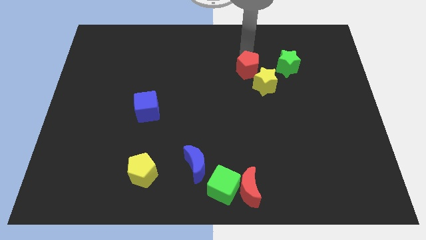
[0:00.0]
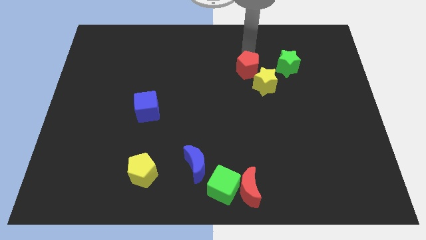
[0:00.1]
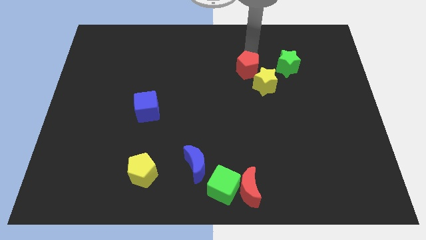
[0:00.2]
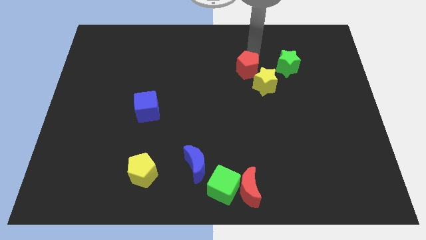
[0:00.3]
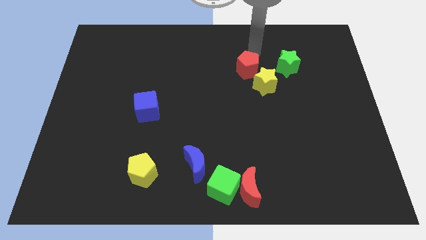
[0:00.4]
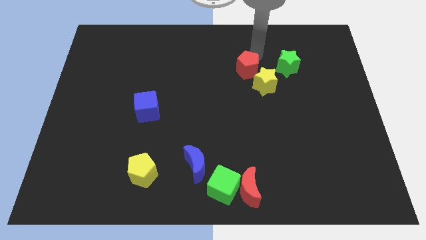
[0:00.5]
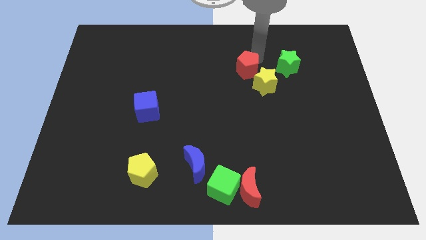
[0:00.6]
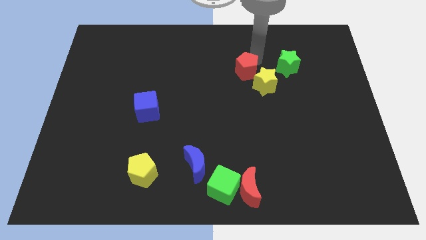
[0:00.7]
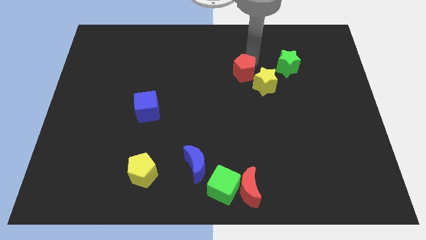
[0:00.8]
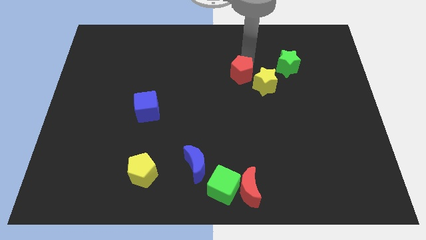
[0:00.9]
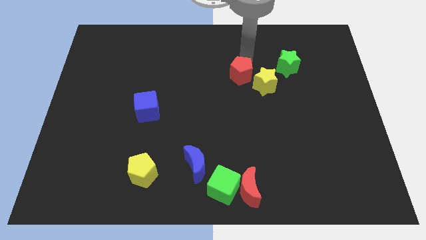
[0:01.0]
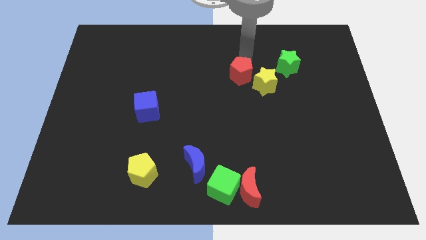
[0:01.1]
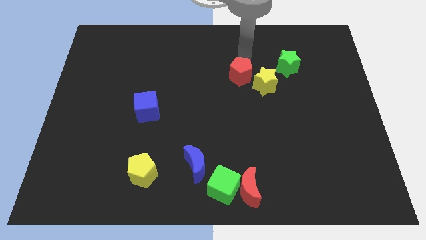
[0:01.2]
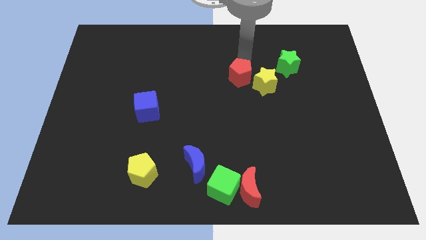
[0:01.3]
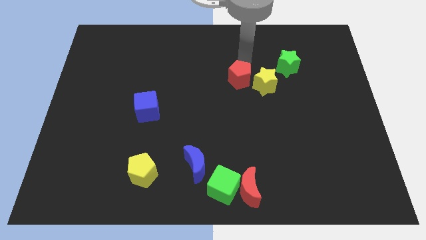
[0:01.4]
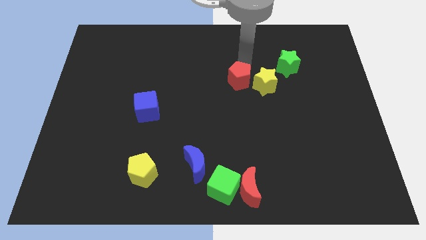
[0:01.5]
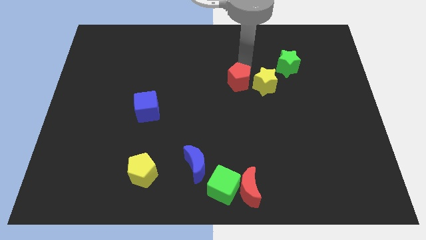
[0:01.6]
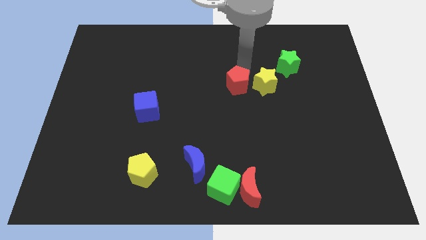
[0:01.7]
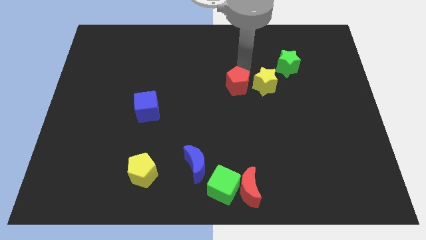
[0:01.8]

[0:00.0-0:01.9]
put the red pentagon left to the yellow star

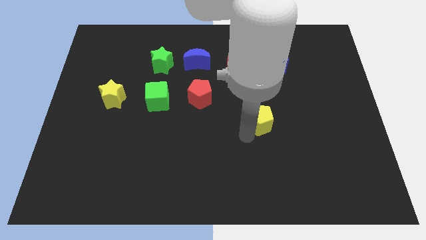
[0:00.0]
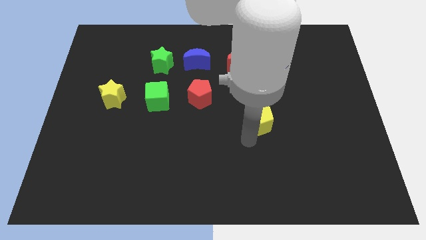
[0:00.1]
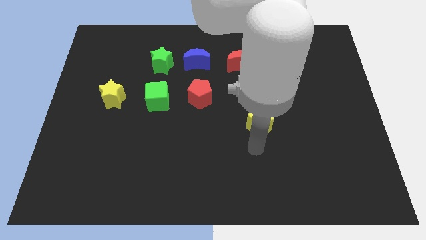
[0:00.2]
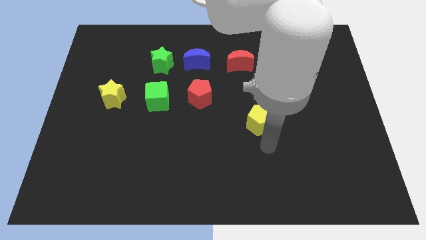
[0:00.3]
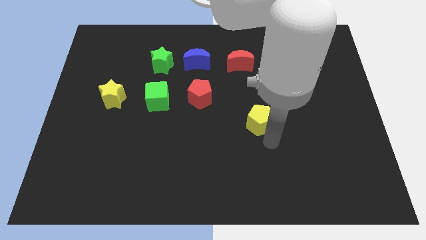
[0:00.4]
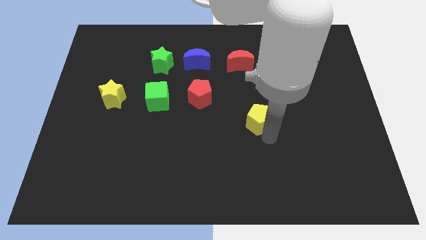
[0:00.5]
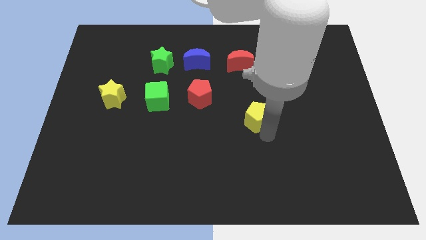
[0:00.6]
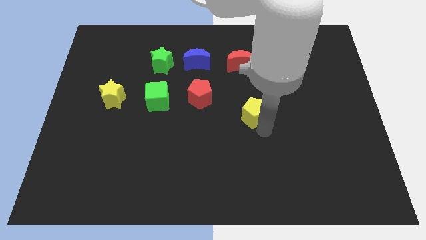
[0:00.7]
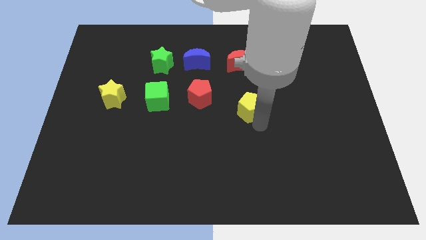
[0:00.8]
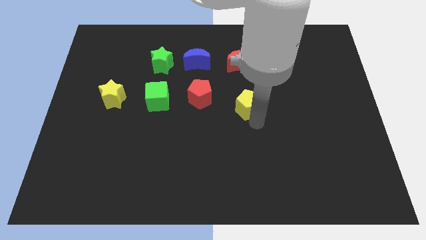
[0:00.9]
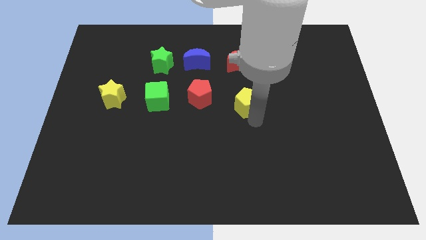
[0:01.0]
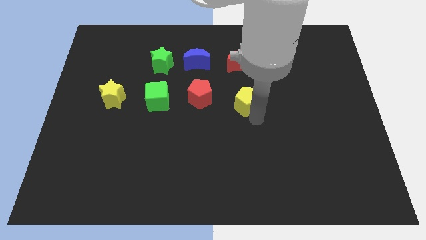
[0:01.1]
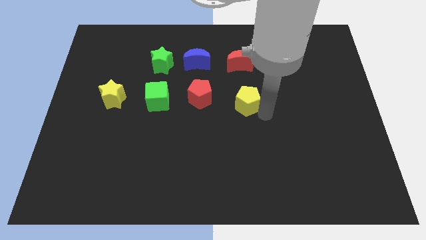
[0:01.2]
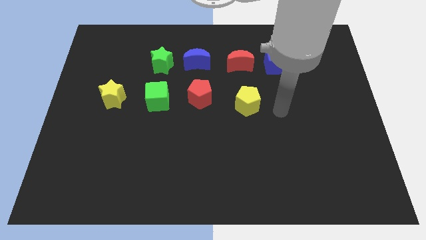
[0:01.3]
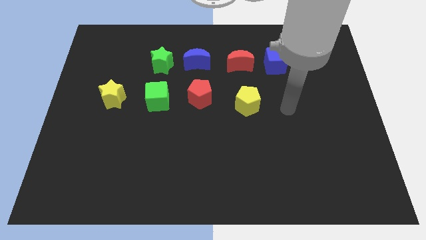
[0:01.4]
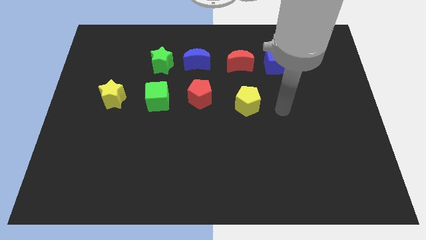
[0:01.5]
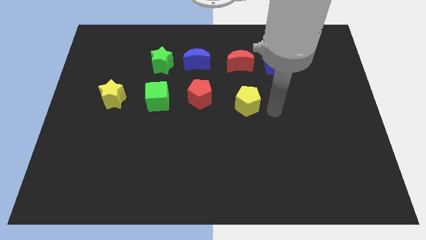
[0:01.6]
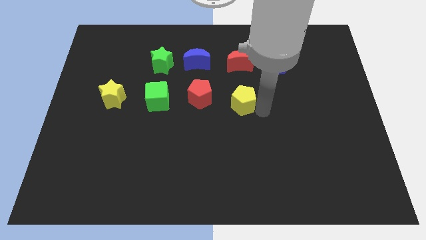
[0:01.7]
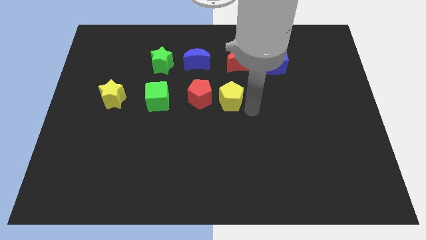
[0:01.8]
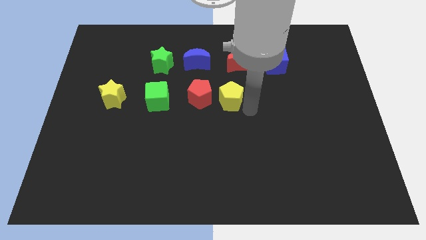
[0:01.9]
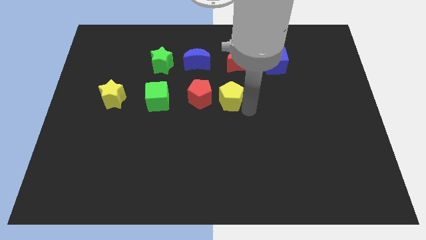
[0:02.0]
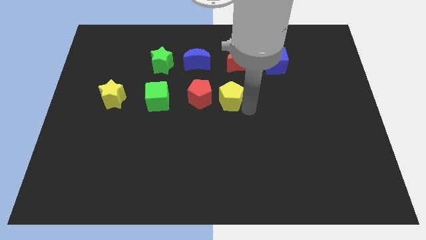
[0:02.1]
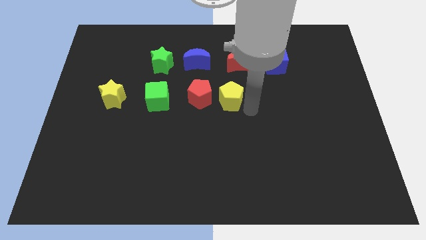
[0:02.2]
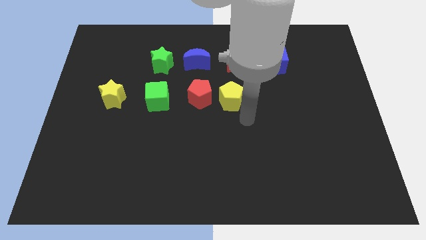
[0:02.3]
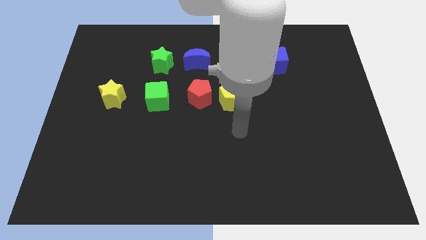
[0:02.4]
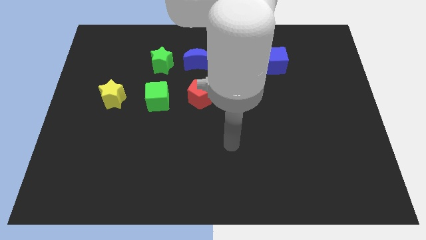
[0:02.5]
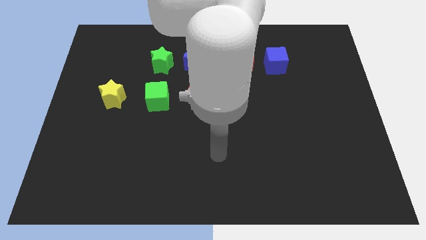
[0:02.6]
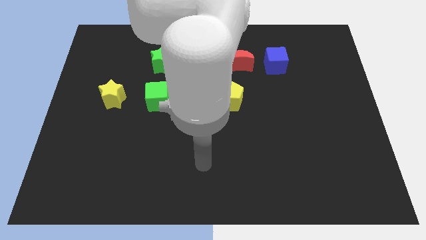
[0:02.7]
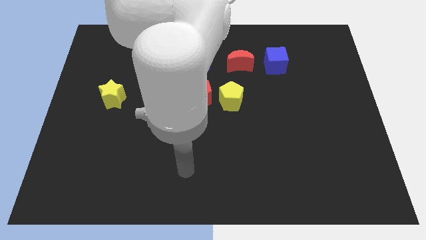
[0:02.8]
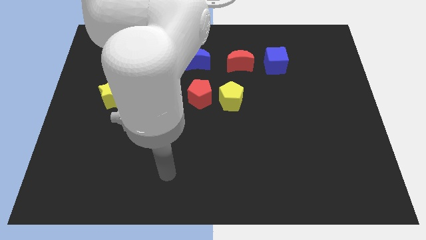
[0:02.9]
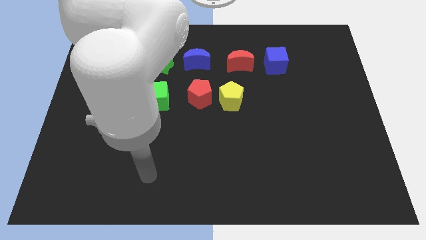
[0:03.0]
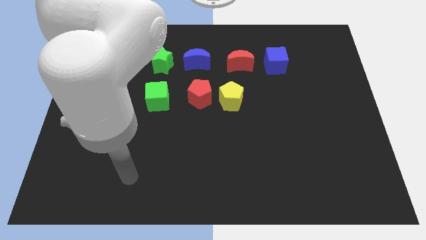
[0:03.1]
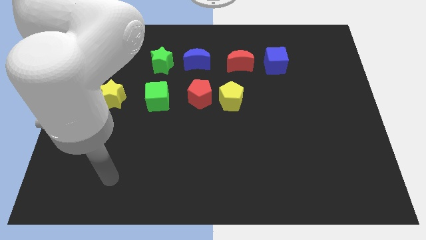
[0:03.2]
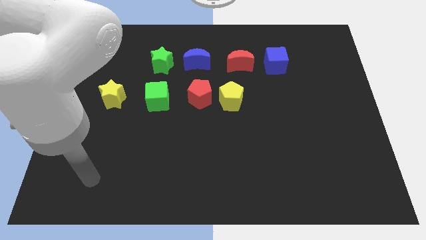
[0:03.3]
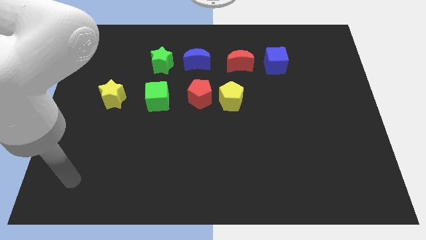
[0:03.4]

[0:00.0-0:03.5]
move the yellow pentagon to the right side of the red pentagon

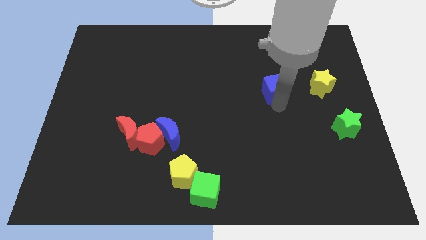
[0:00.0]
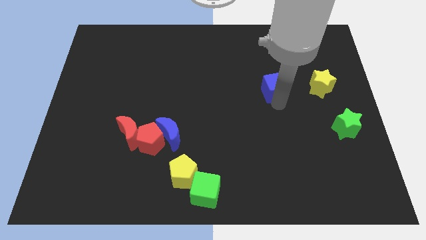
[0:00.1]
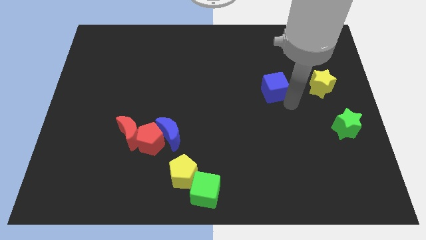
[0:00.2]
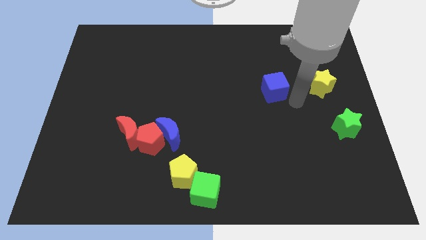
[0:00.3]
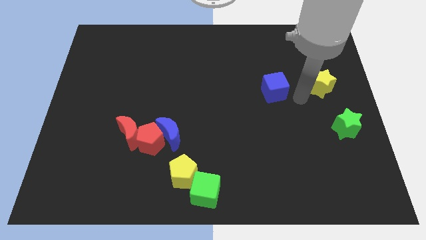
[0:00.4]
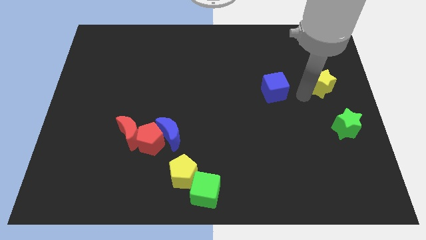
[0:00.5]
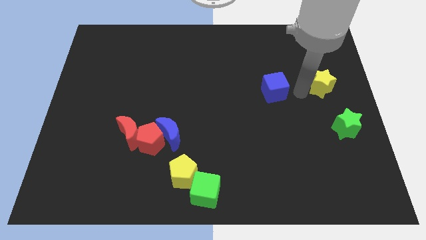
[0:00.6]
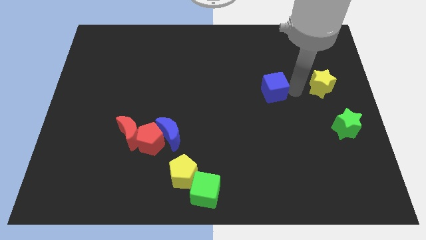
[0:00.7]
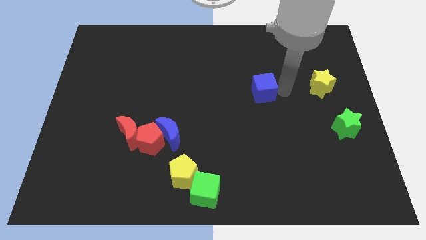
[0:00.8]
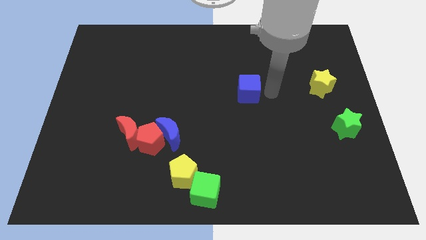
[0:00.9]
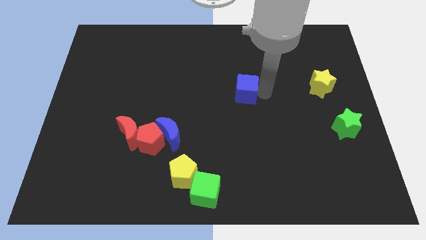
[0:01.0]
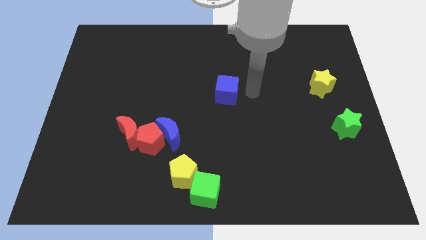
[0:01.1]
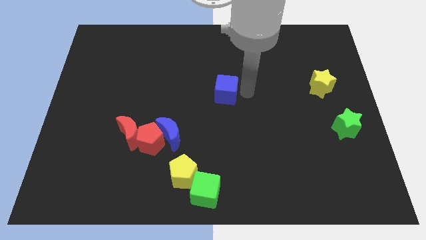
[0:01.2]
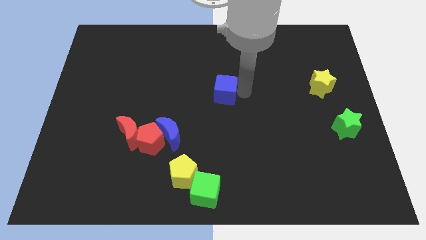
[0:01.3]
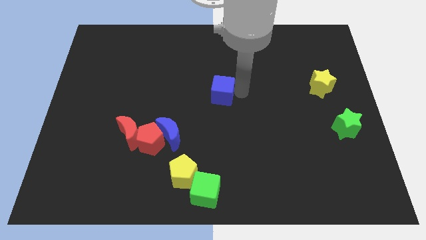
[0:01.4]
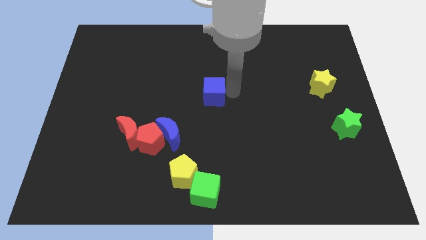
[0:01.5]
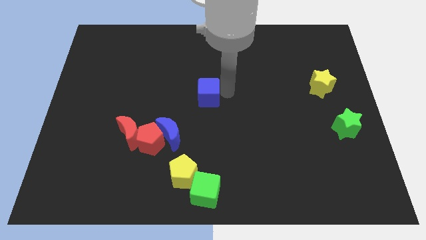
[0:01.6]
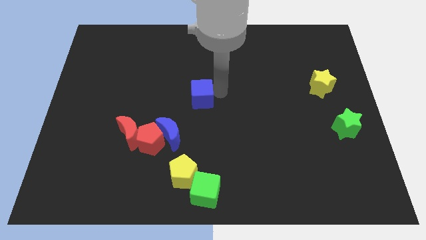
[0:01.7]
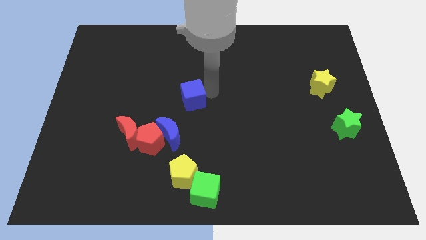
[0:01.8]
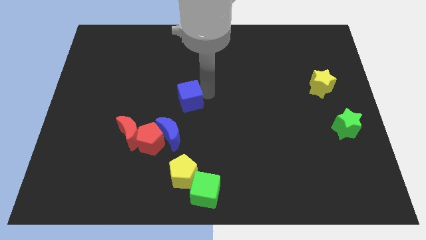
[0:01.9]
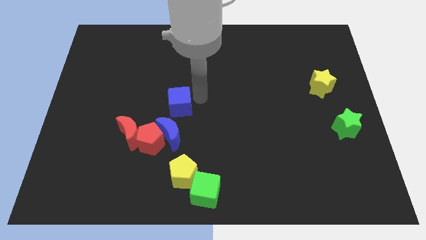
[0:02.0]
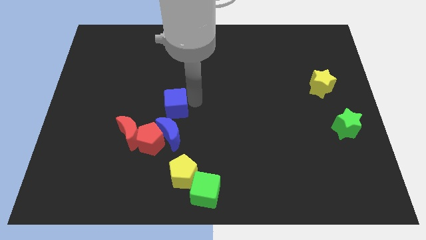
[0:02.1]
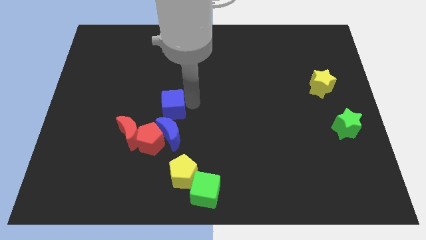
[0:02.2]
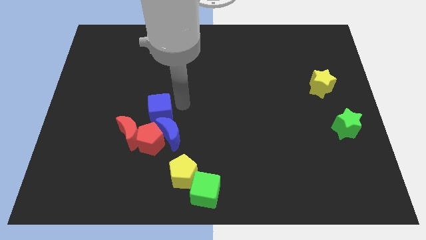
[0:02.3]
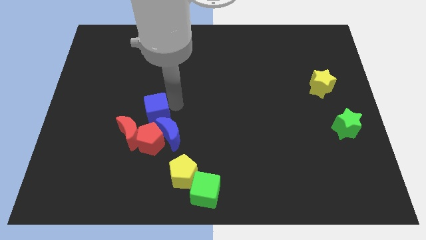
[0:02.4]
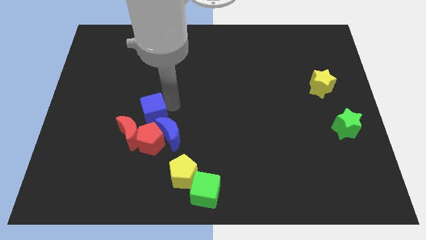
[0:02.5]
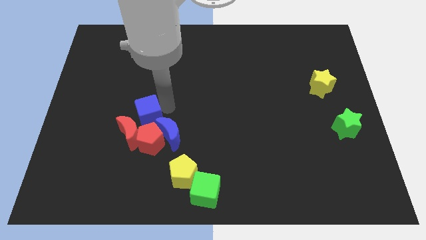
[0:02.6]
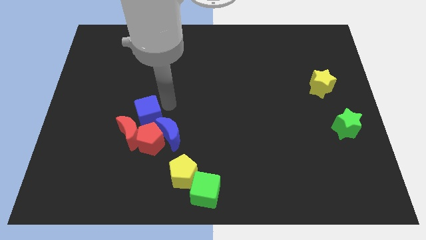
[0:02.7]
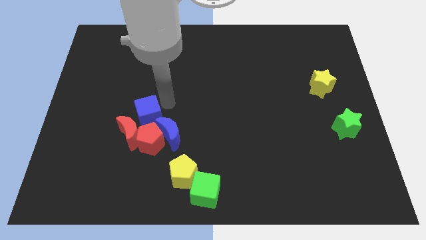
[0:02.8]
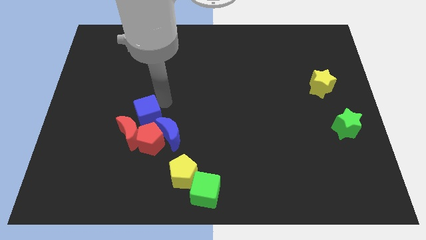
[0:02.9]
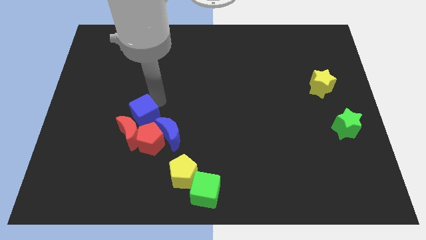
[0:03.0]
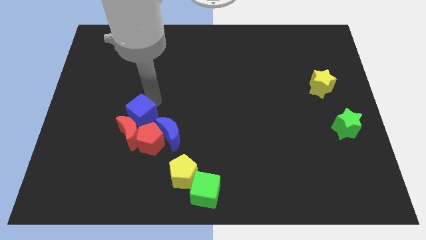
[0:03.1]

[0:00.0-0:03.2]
push the blue cube to the top of the red pentagon

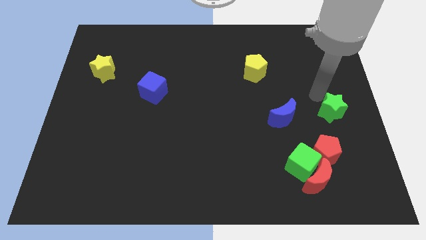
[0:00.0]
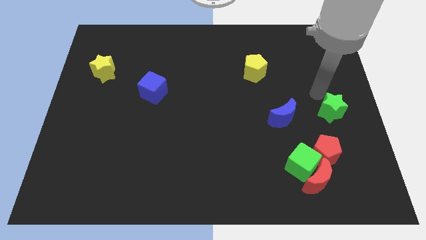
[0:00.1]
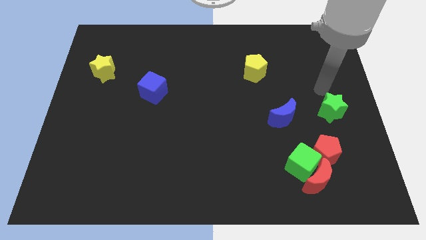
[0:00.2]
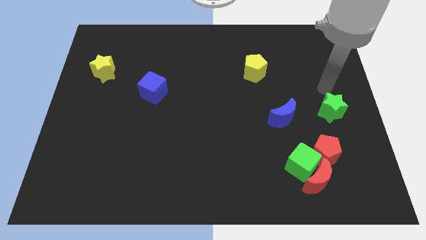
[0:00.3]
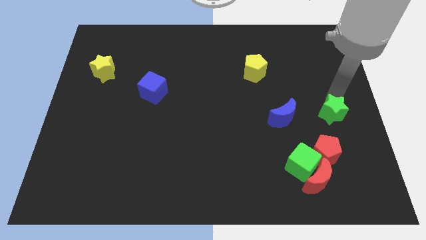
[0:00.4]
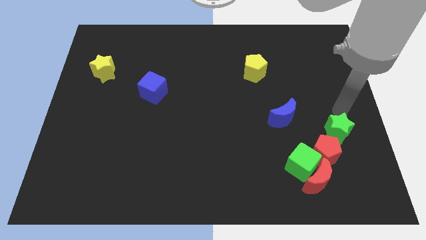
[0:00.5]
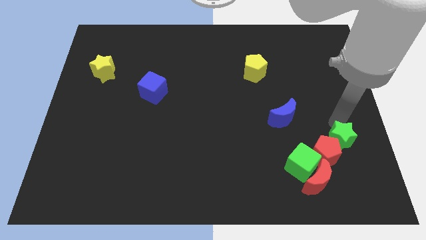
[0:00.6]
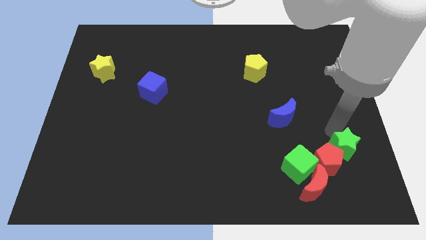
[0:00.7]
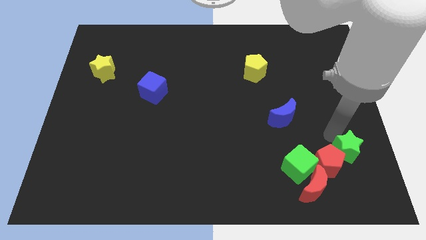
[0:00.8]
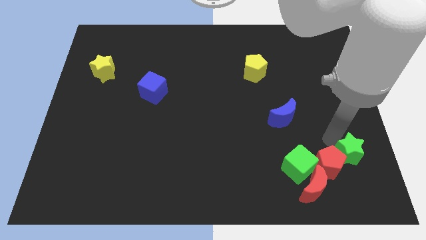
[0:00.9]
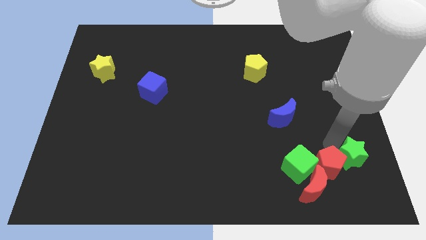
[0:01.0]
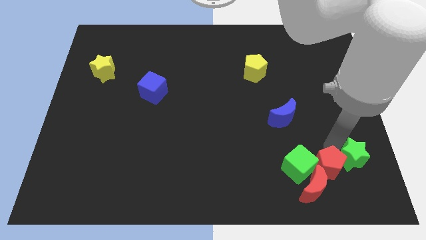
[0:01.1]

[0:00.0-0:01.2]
push the green star into the red pentagon
